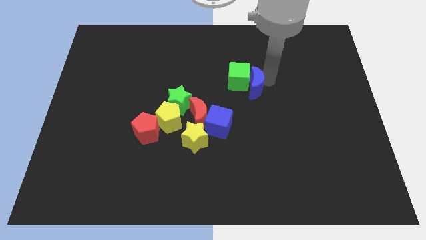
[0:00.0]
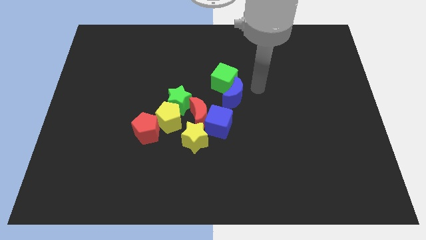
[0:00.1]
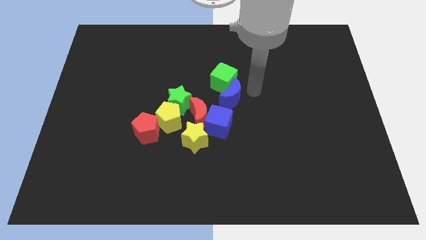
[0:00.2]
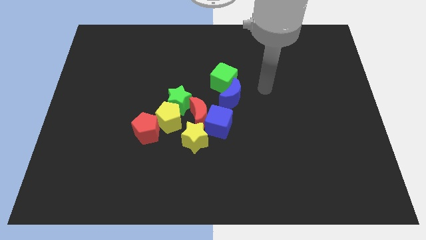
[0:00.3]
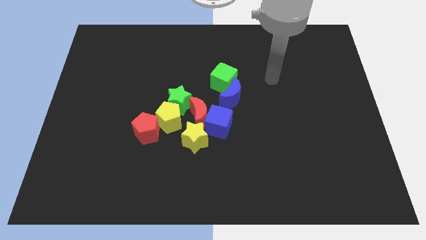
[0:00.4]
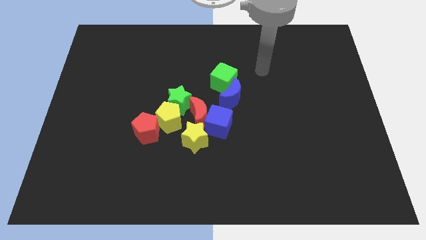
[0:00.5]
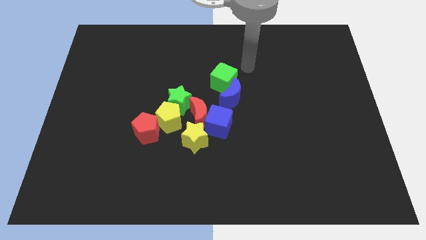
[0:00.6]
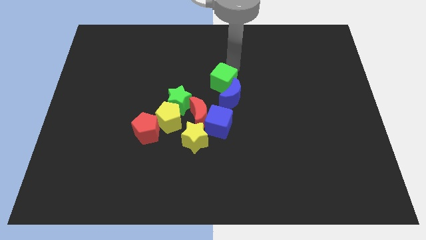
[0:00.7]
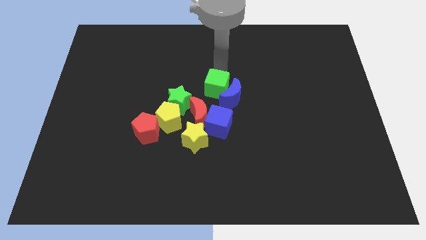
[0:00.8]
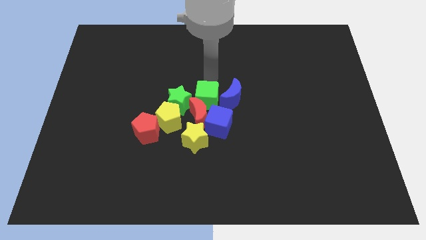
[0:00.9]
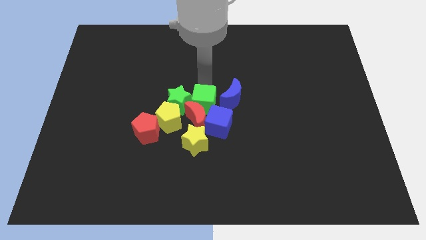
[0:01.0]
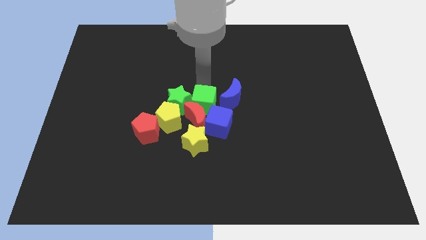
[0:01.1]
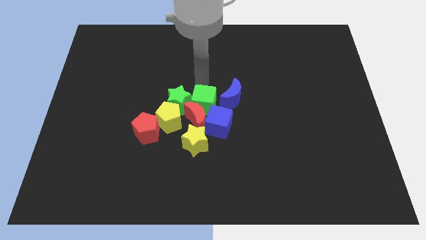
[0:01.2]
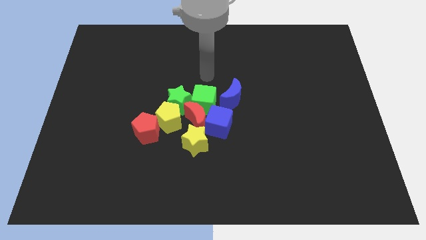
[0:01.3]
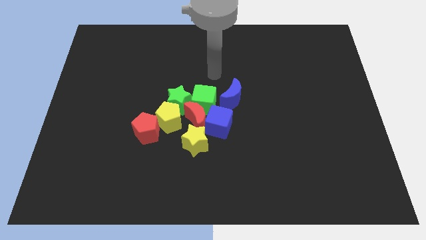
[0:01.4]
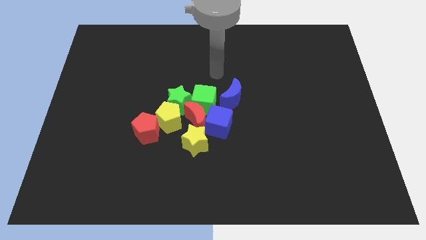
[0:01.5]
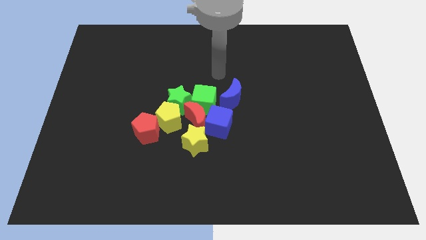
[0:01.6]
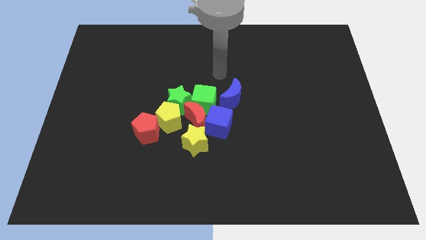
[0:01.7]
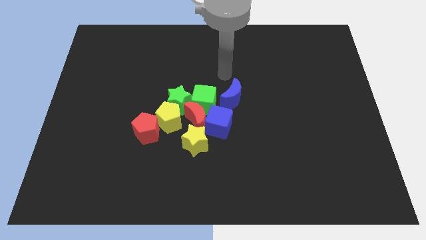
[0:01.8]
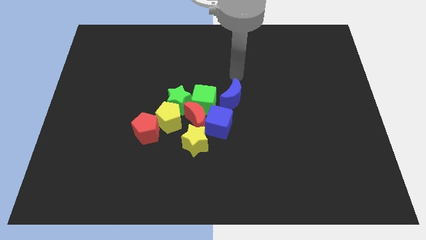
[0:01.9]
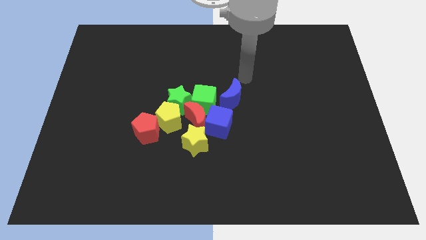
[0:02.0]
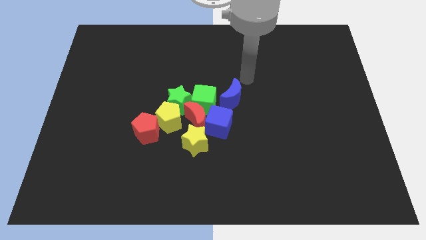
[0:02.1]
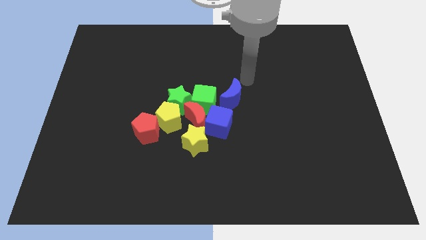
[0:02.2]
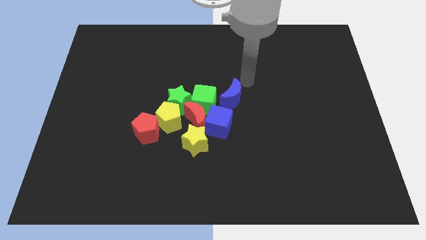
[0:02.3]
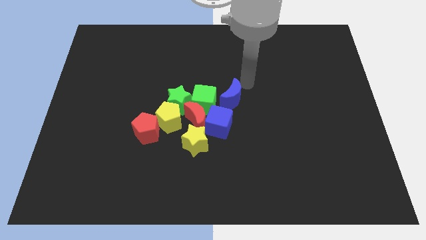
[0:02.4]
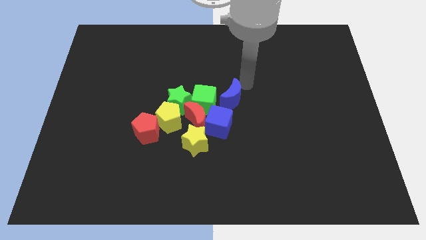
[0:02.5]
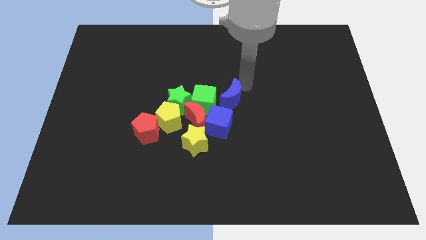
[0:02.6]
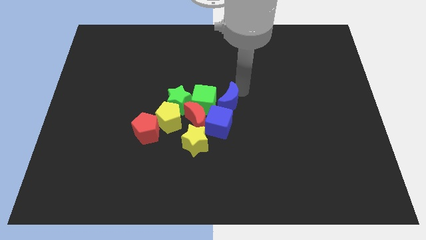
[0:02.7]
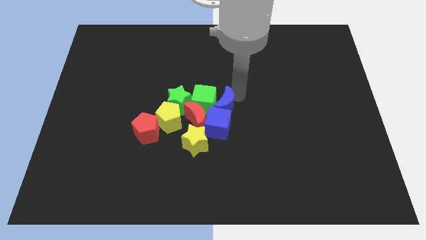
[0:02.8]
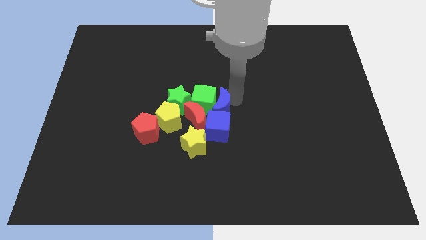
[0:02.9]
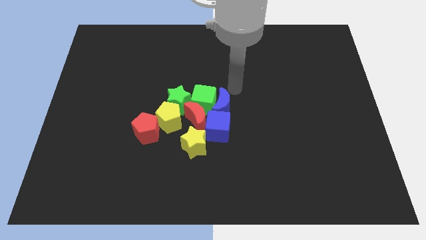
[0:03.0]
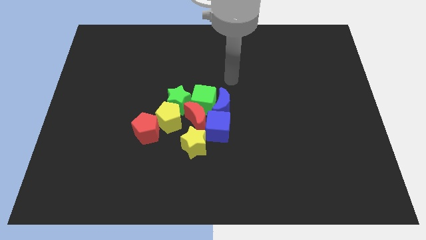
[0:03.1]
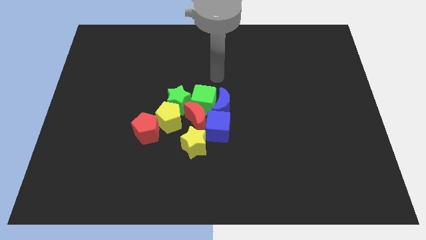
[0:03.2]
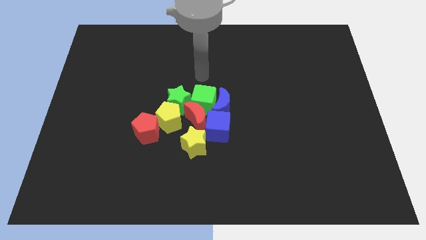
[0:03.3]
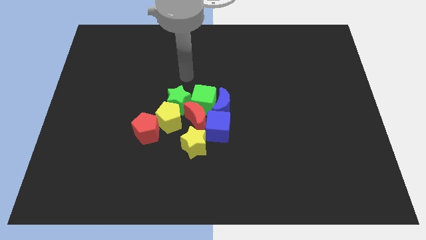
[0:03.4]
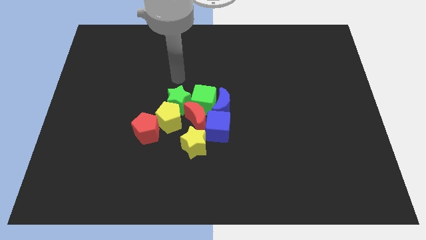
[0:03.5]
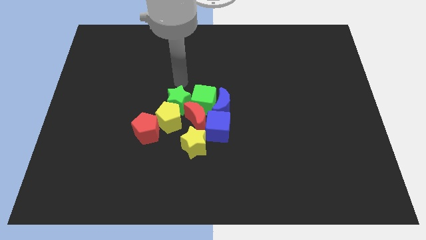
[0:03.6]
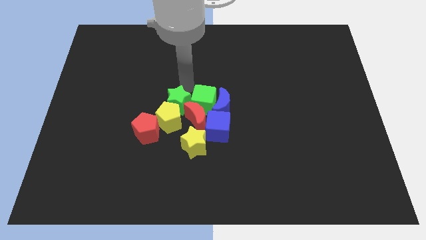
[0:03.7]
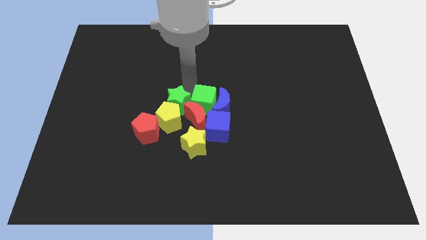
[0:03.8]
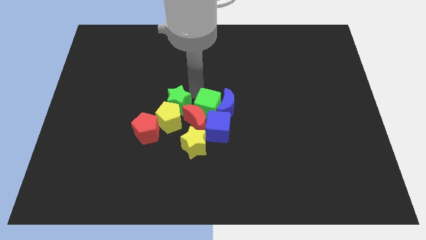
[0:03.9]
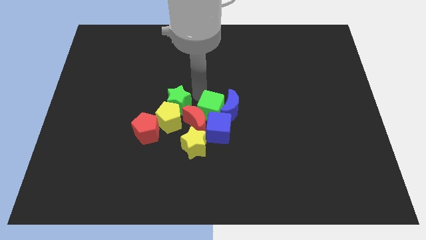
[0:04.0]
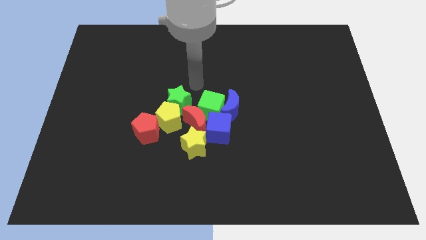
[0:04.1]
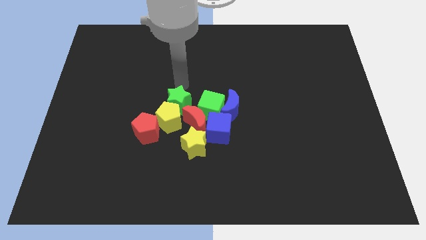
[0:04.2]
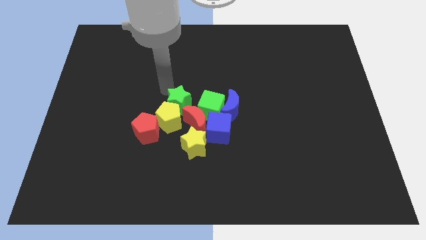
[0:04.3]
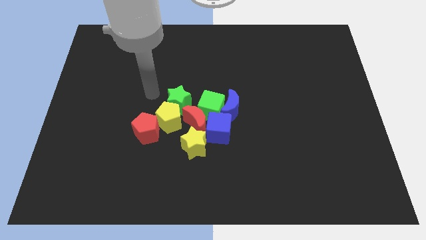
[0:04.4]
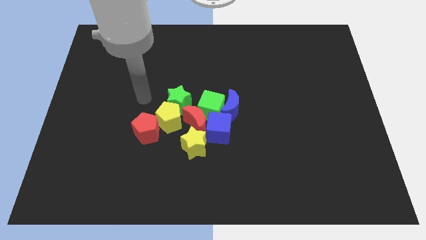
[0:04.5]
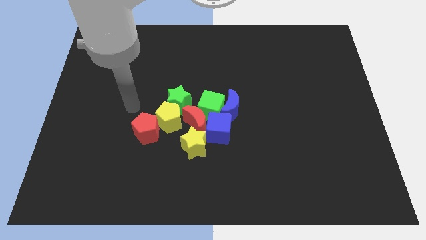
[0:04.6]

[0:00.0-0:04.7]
make all the blocks touch

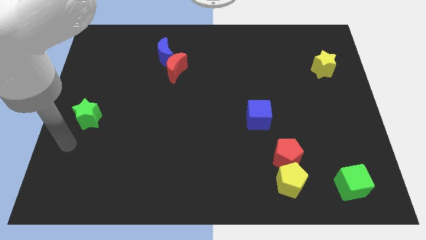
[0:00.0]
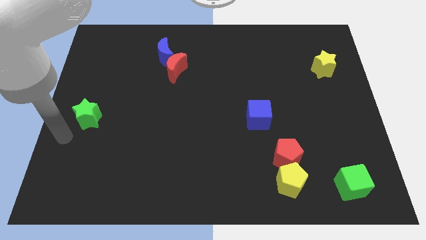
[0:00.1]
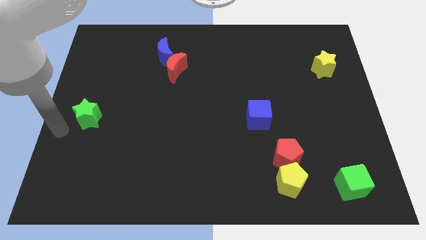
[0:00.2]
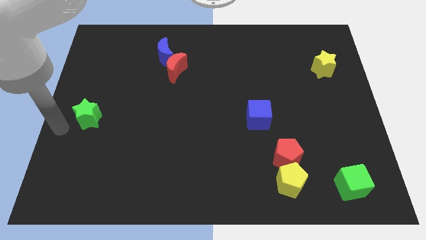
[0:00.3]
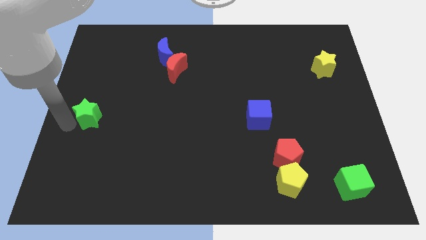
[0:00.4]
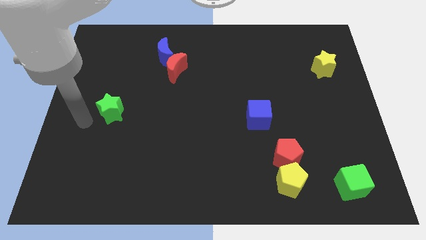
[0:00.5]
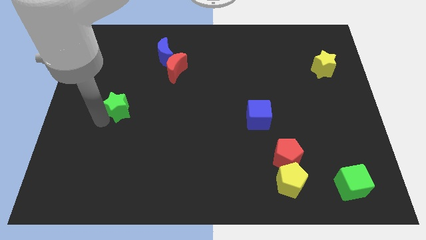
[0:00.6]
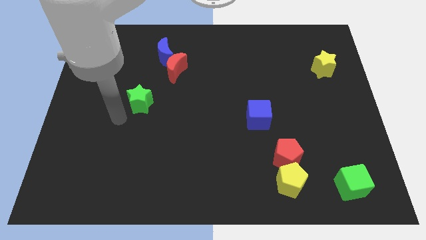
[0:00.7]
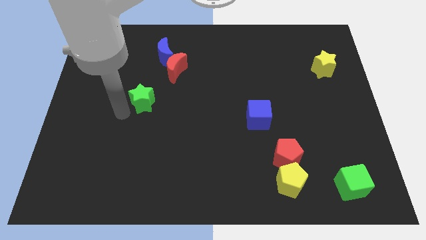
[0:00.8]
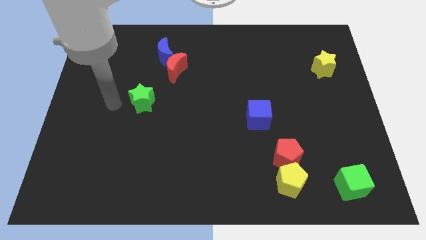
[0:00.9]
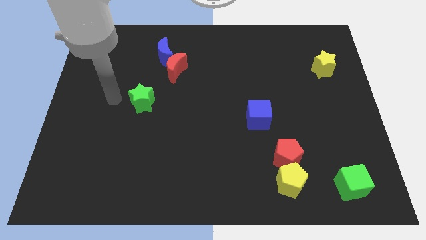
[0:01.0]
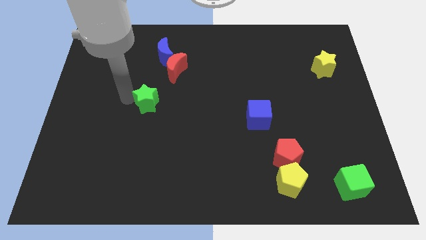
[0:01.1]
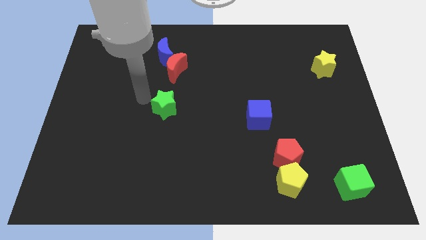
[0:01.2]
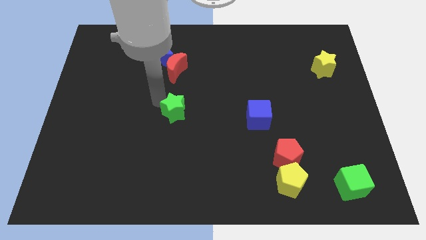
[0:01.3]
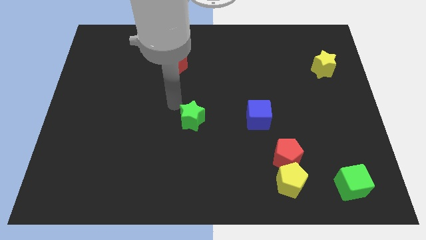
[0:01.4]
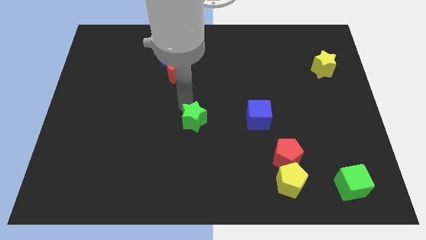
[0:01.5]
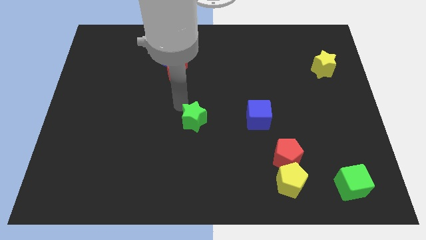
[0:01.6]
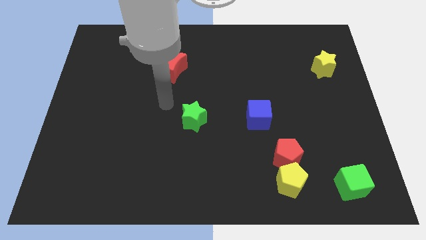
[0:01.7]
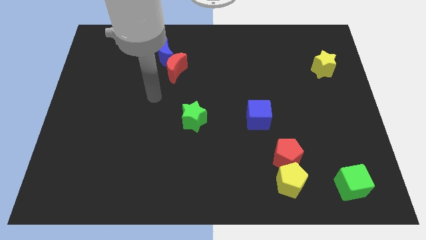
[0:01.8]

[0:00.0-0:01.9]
place the green star to the left of blue cube

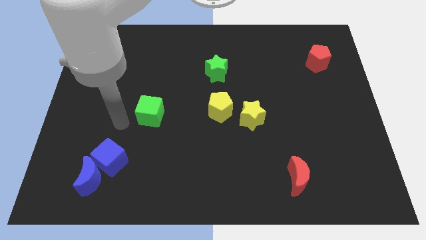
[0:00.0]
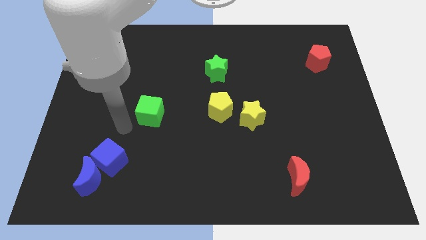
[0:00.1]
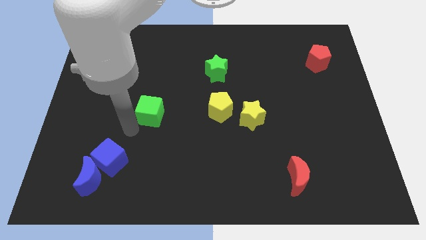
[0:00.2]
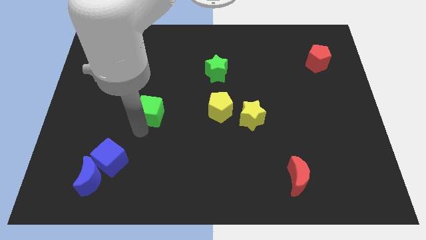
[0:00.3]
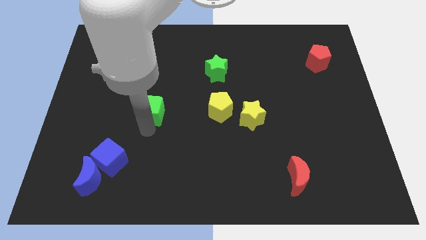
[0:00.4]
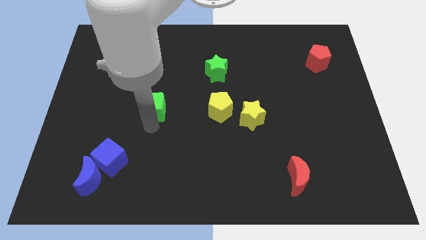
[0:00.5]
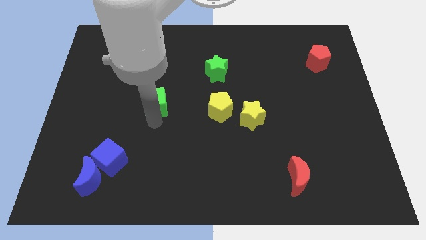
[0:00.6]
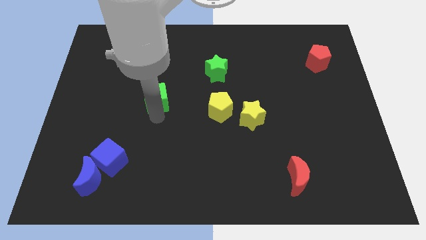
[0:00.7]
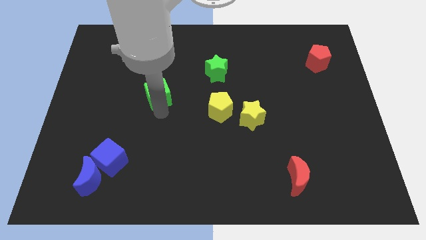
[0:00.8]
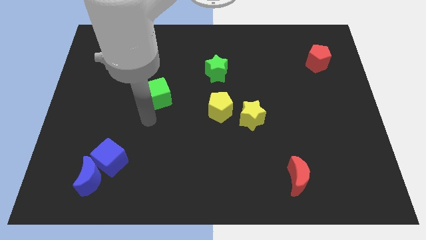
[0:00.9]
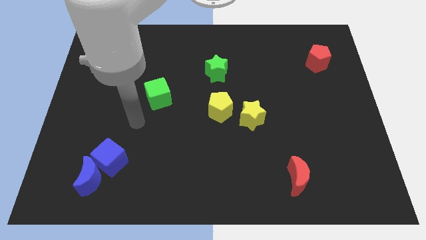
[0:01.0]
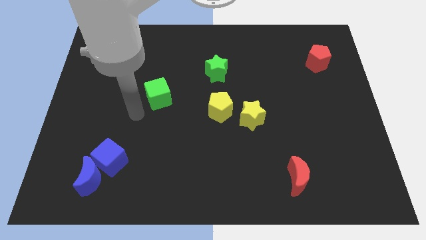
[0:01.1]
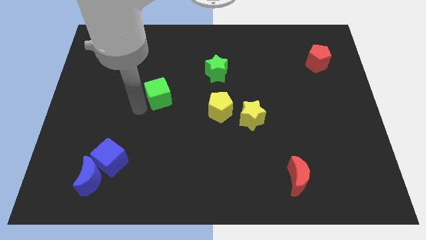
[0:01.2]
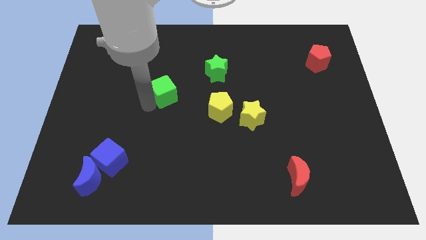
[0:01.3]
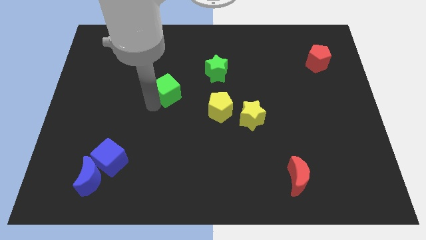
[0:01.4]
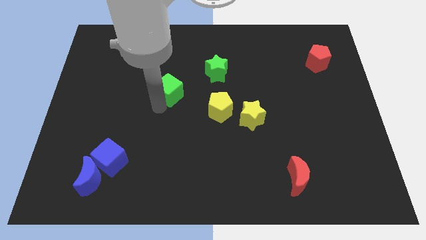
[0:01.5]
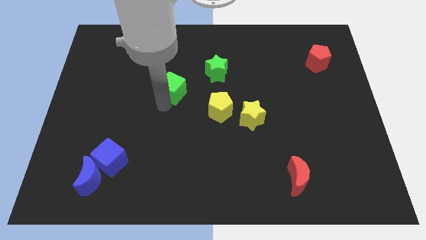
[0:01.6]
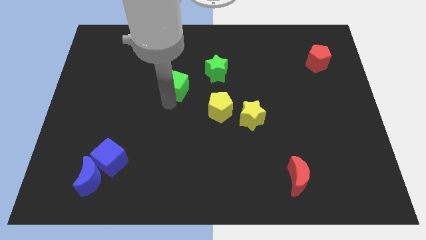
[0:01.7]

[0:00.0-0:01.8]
place the green cube diagonally to green star

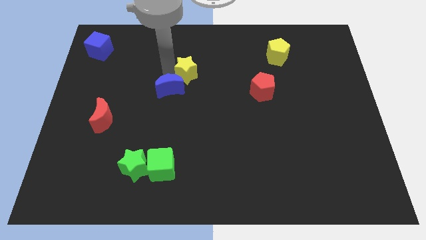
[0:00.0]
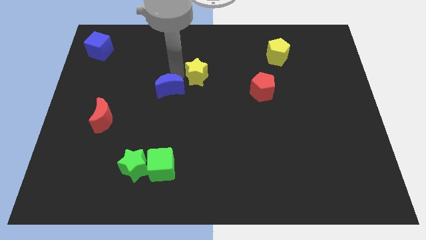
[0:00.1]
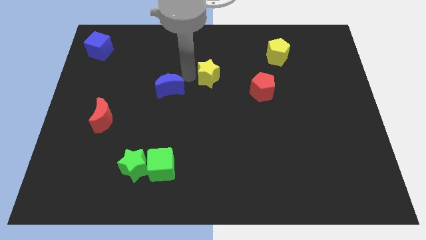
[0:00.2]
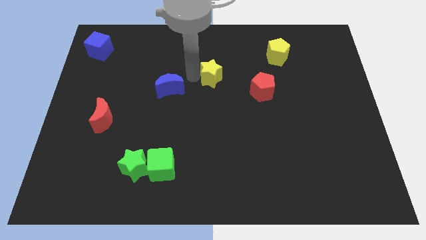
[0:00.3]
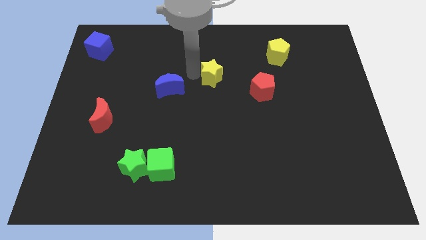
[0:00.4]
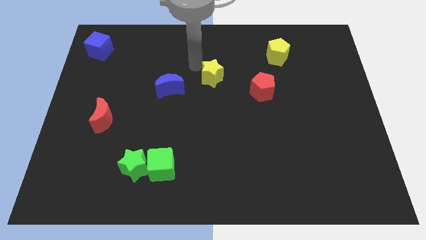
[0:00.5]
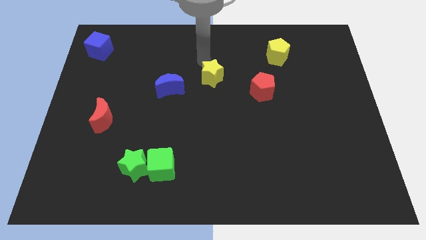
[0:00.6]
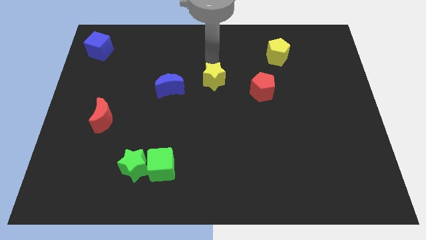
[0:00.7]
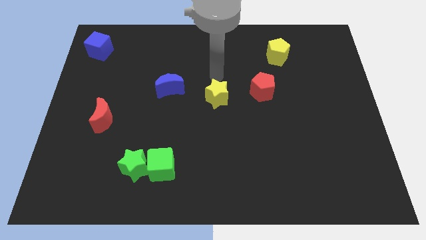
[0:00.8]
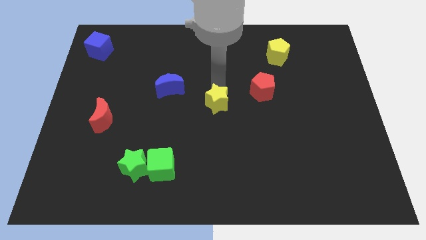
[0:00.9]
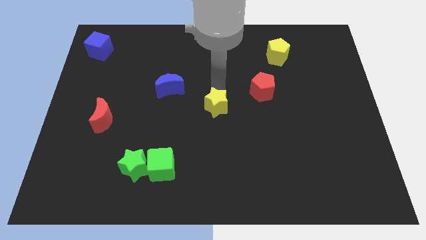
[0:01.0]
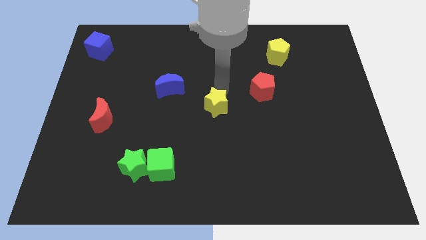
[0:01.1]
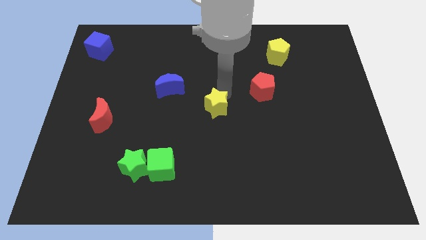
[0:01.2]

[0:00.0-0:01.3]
push yellow star to the center of the board
